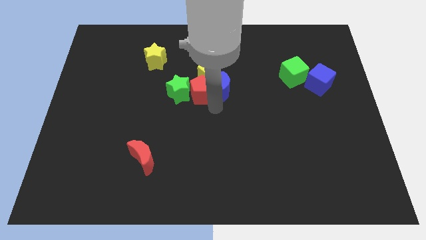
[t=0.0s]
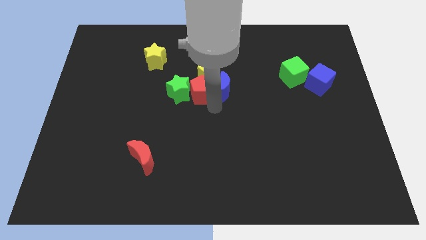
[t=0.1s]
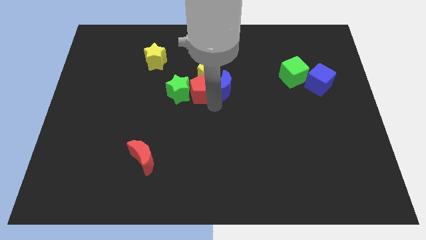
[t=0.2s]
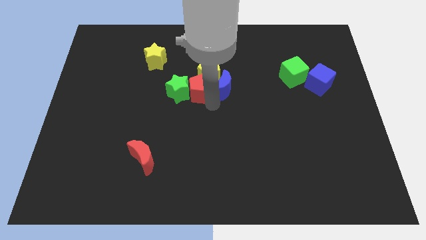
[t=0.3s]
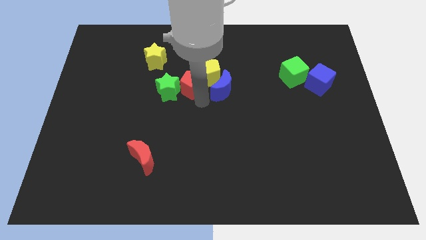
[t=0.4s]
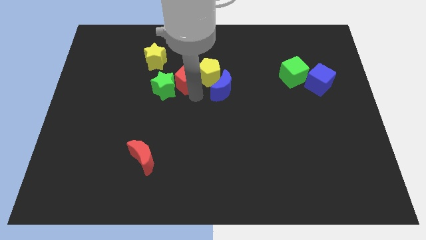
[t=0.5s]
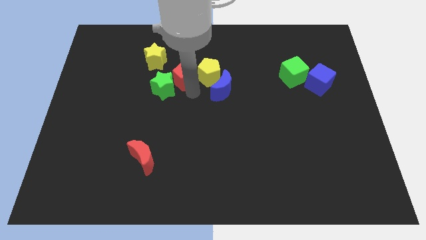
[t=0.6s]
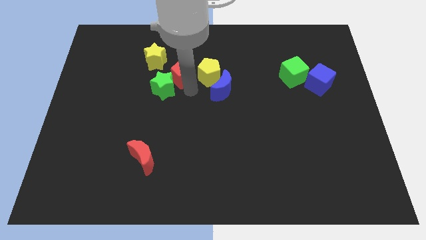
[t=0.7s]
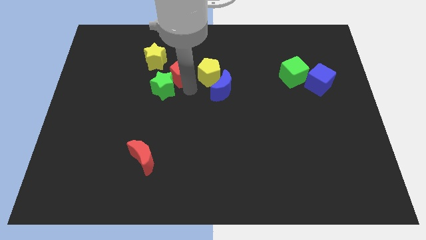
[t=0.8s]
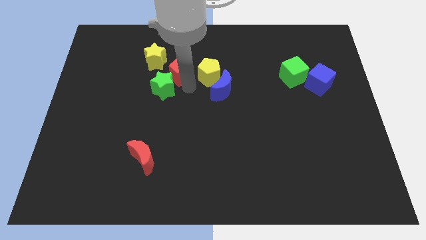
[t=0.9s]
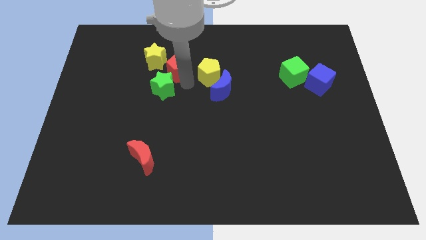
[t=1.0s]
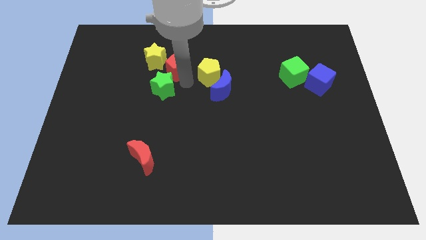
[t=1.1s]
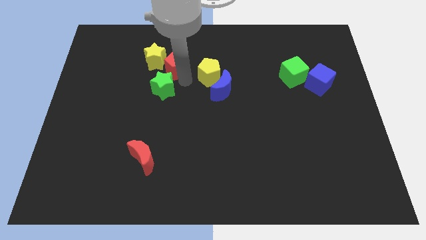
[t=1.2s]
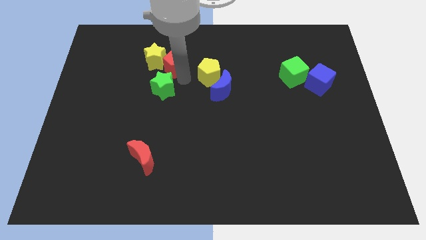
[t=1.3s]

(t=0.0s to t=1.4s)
place red pentagon beside yellow star

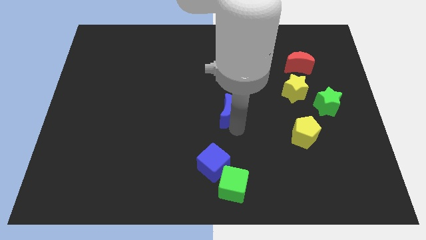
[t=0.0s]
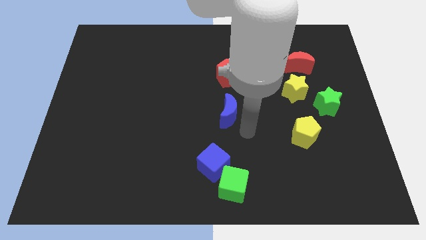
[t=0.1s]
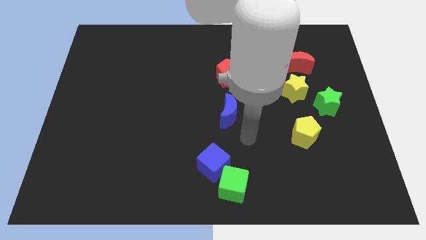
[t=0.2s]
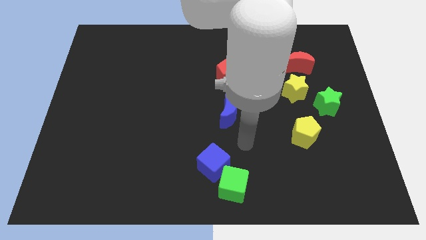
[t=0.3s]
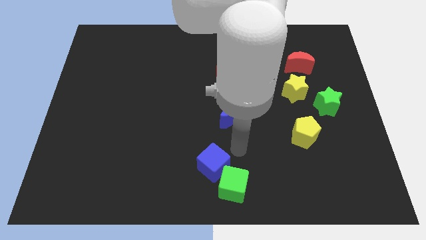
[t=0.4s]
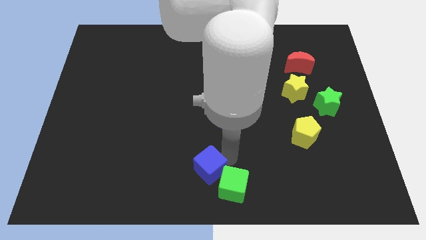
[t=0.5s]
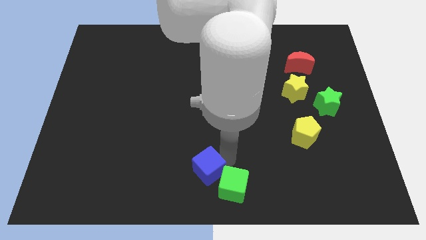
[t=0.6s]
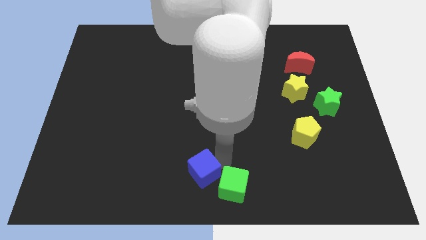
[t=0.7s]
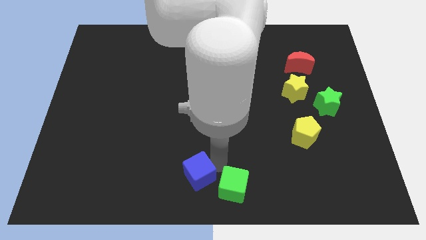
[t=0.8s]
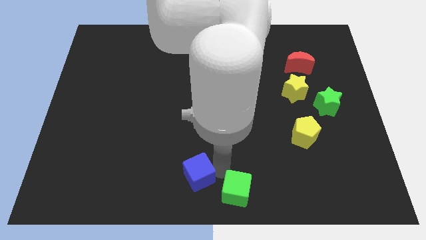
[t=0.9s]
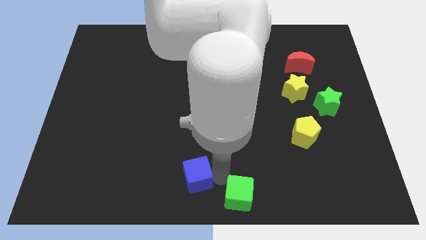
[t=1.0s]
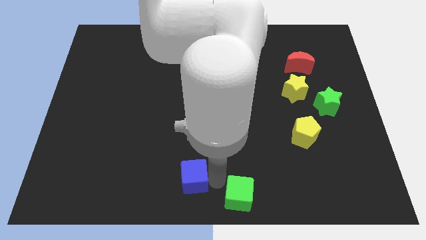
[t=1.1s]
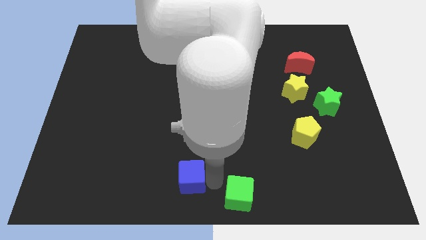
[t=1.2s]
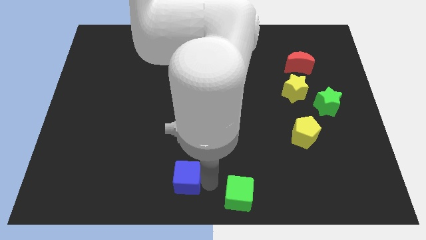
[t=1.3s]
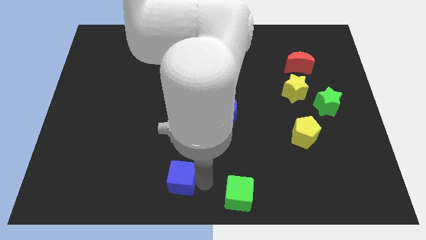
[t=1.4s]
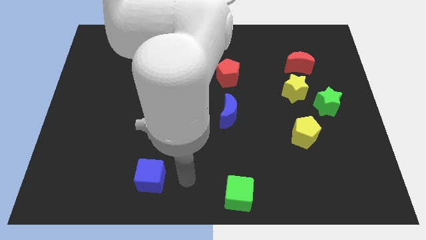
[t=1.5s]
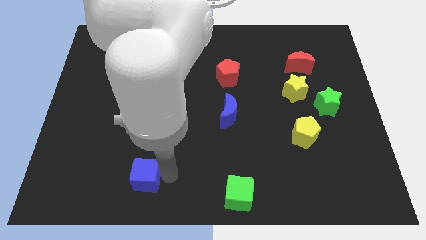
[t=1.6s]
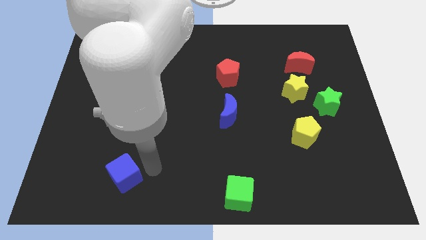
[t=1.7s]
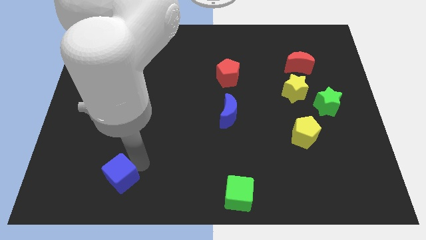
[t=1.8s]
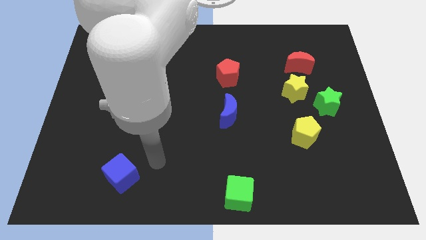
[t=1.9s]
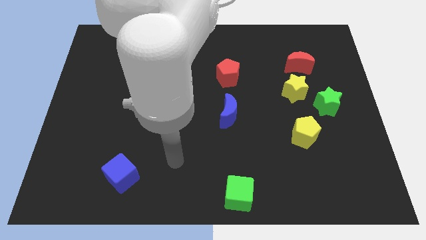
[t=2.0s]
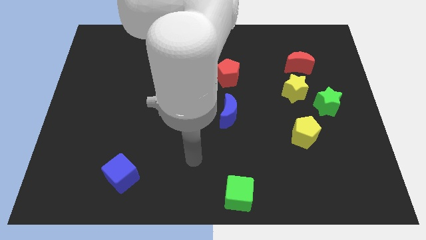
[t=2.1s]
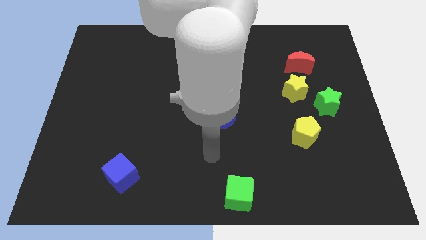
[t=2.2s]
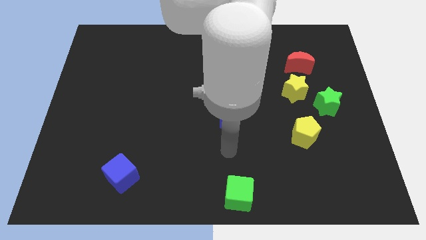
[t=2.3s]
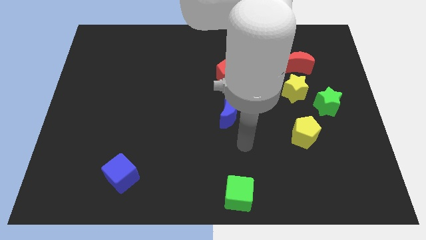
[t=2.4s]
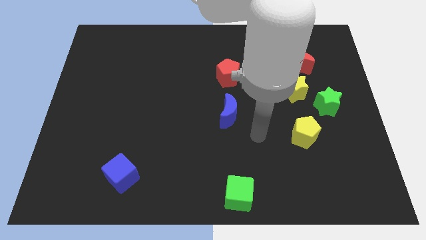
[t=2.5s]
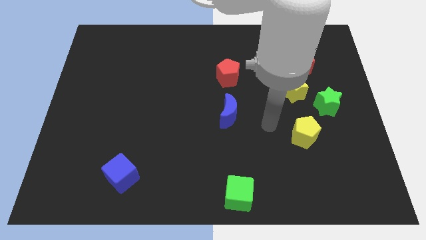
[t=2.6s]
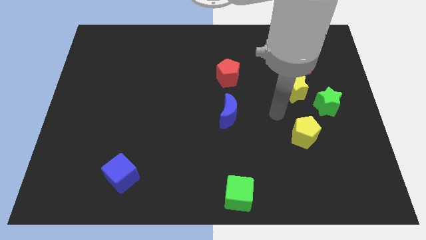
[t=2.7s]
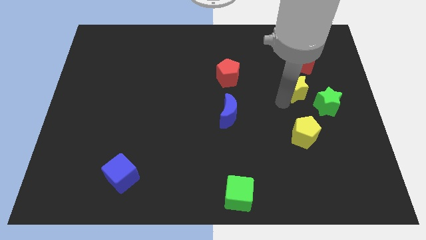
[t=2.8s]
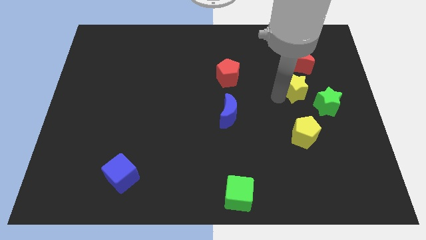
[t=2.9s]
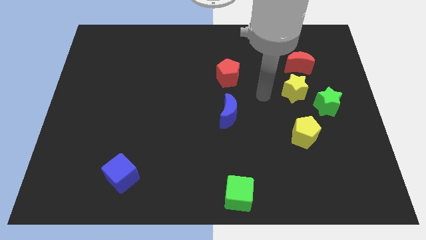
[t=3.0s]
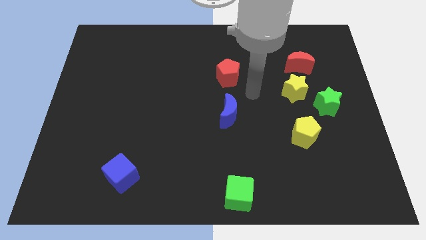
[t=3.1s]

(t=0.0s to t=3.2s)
separate the blue cube and green cube

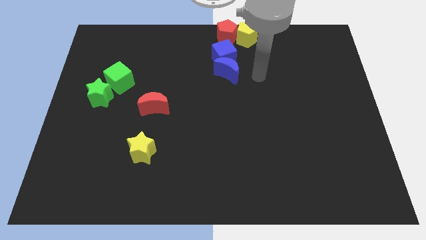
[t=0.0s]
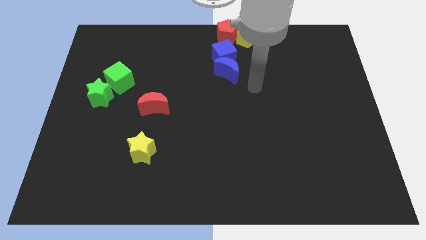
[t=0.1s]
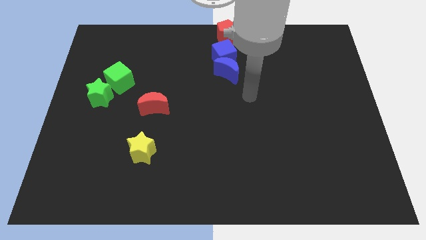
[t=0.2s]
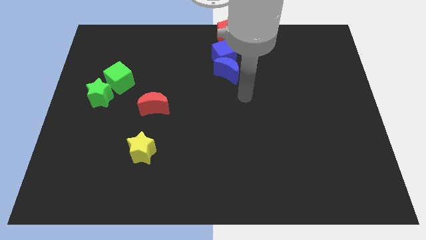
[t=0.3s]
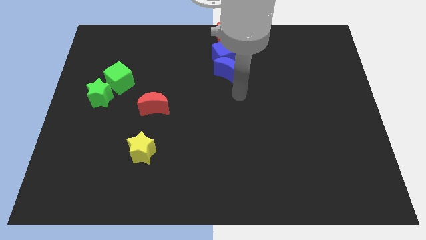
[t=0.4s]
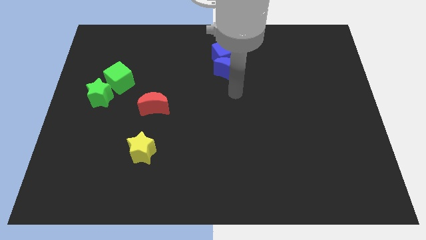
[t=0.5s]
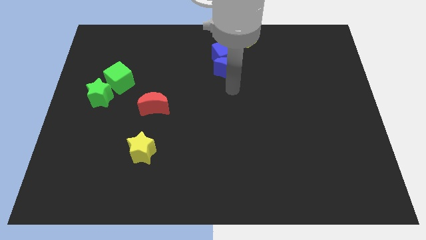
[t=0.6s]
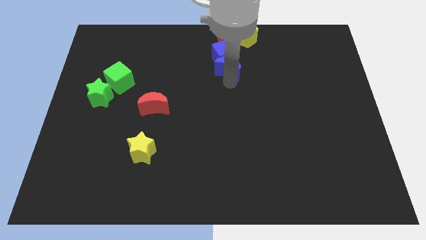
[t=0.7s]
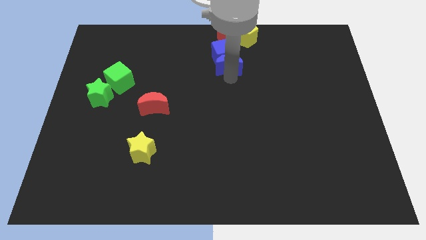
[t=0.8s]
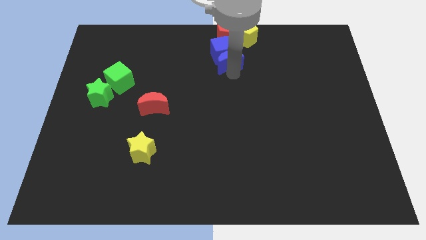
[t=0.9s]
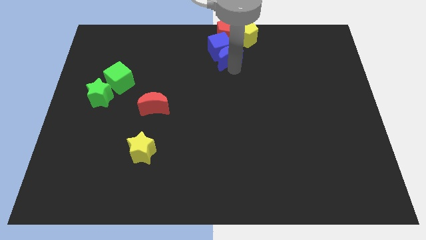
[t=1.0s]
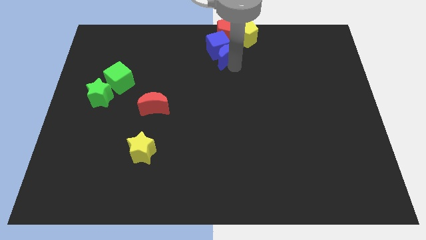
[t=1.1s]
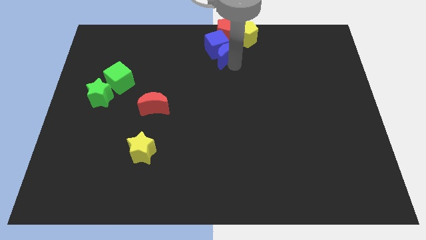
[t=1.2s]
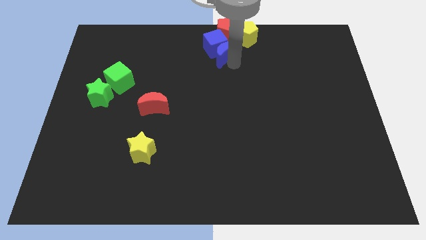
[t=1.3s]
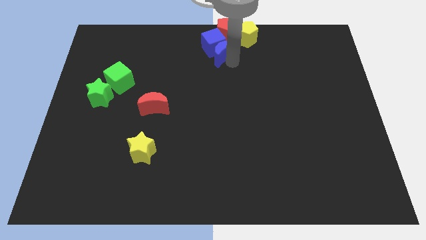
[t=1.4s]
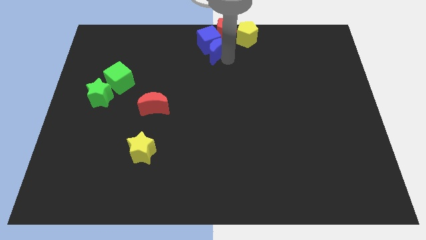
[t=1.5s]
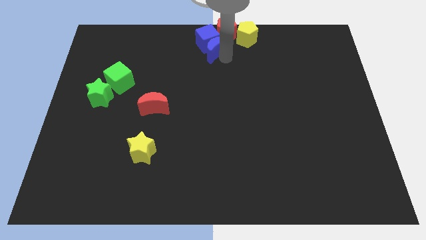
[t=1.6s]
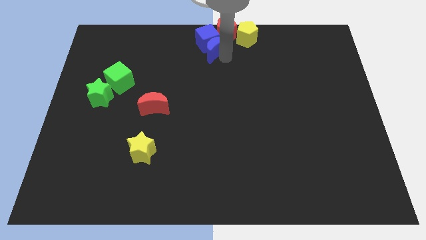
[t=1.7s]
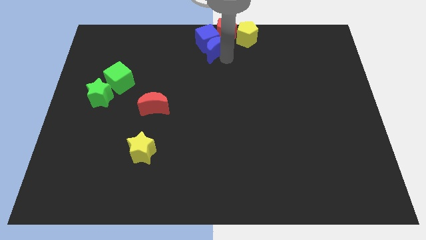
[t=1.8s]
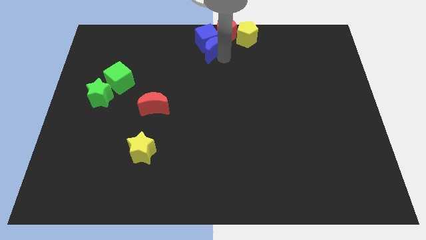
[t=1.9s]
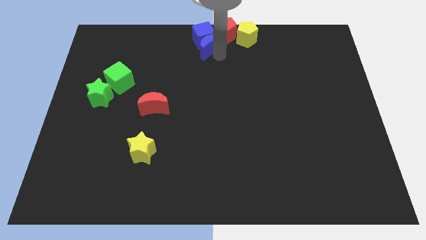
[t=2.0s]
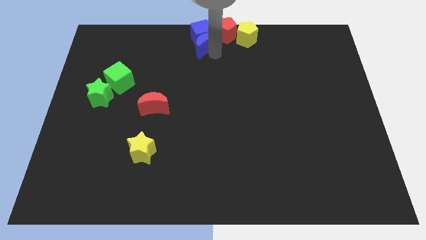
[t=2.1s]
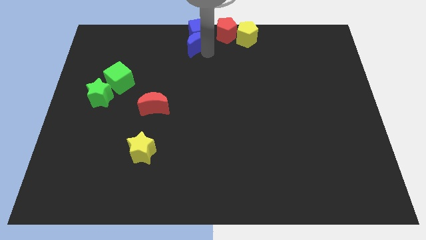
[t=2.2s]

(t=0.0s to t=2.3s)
push the blue blocks to the left of red pentagon

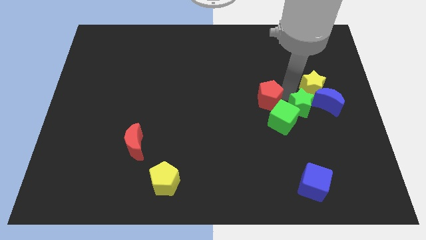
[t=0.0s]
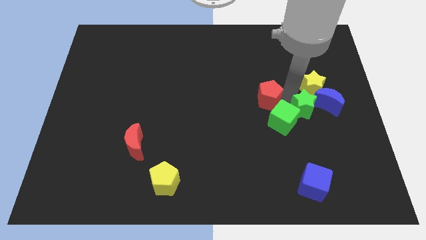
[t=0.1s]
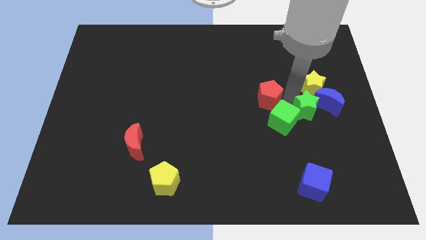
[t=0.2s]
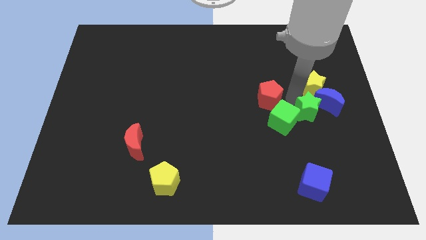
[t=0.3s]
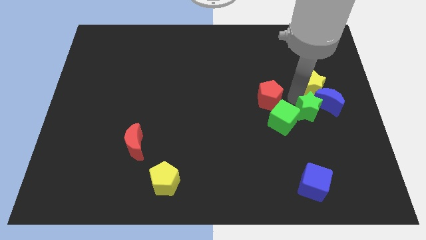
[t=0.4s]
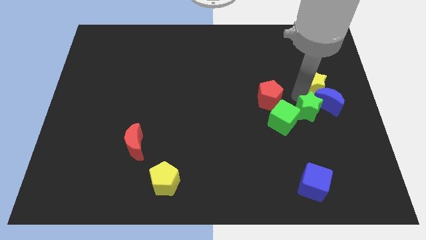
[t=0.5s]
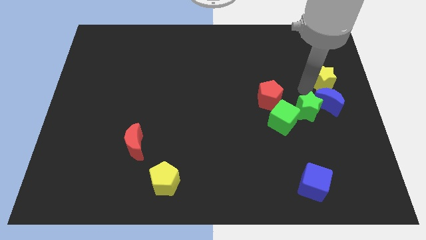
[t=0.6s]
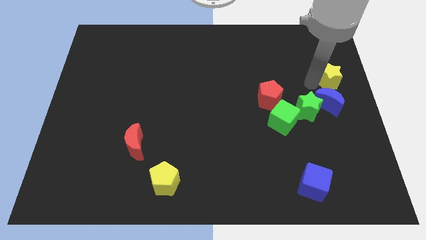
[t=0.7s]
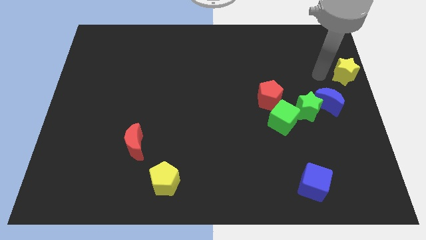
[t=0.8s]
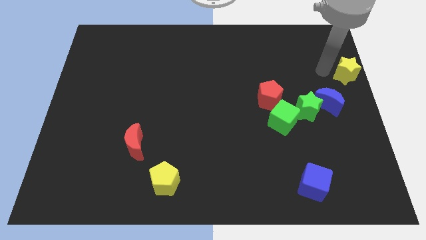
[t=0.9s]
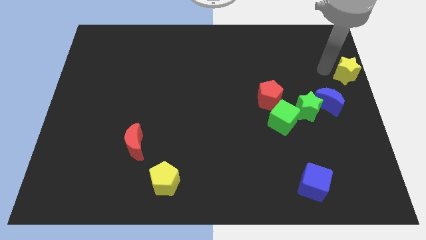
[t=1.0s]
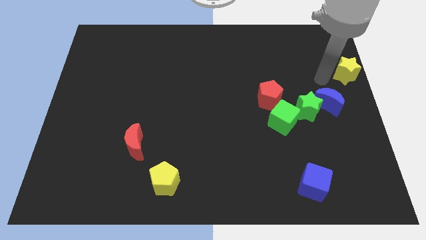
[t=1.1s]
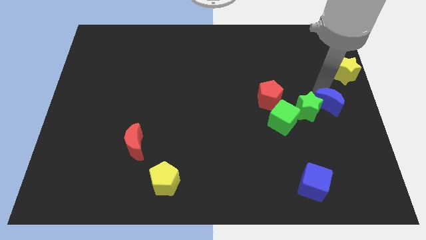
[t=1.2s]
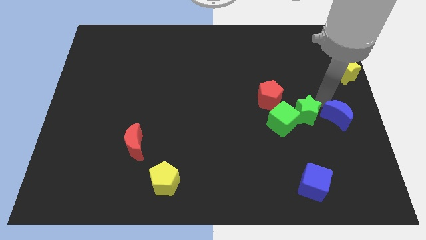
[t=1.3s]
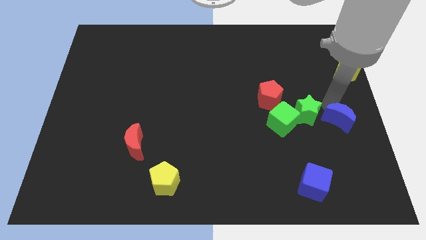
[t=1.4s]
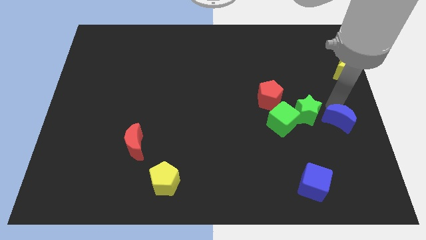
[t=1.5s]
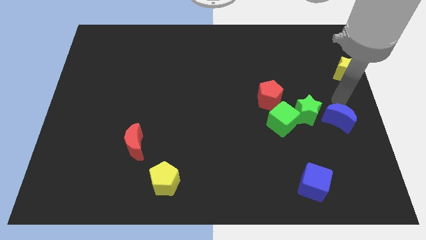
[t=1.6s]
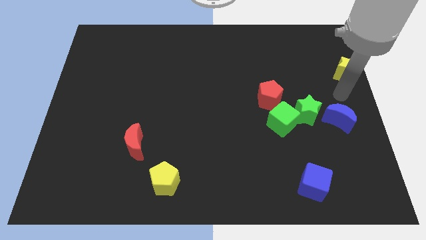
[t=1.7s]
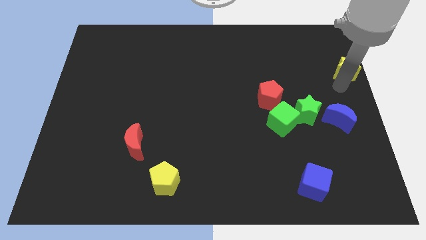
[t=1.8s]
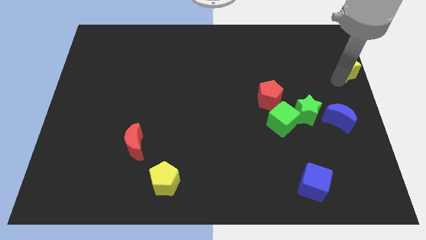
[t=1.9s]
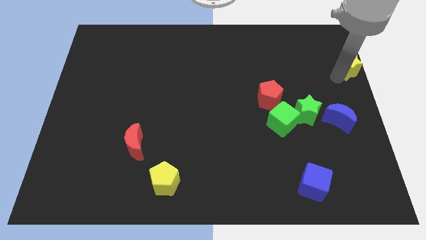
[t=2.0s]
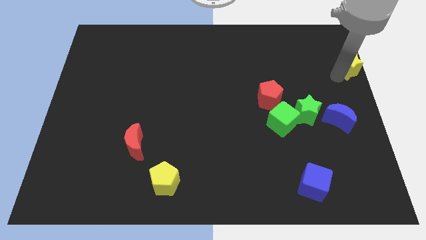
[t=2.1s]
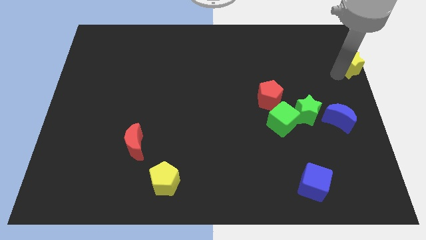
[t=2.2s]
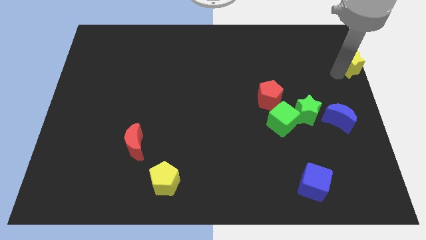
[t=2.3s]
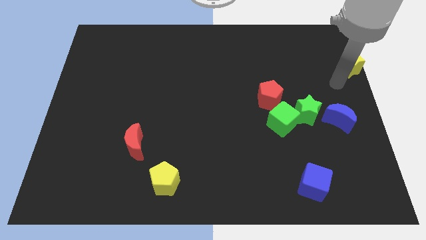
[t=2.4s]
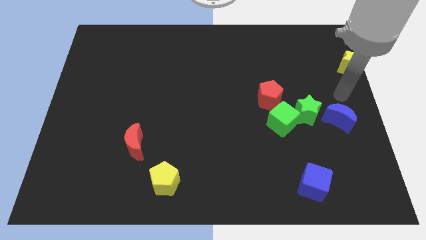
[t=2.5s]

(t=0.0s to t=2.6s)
move yellow star towards the right side of the board
